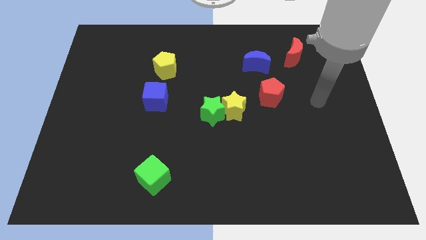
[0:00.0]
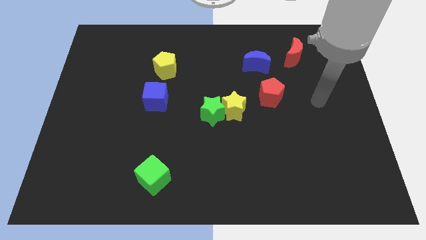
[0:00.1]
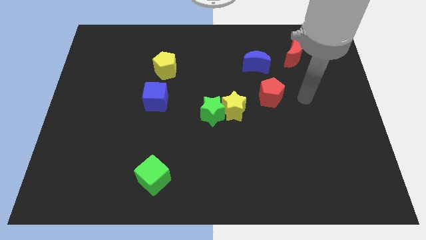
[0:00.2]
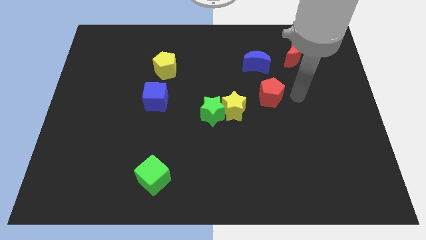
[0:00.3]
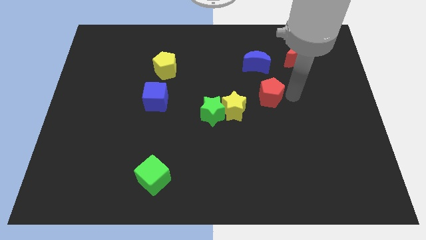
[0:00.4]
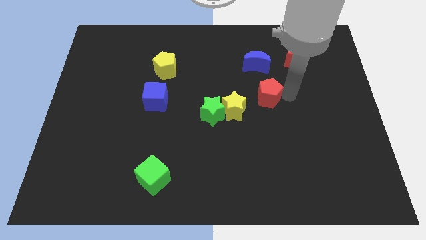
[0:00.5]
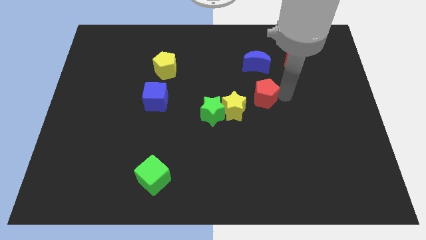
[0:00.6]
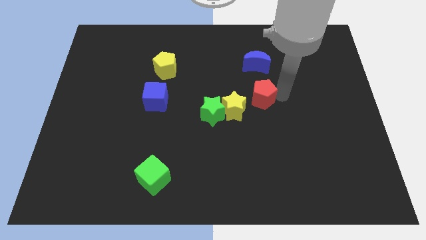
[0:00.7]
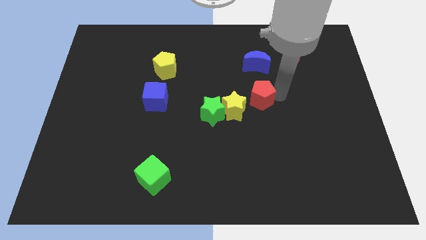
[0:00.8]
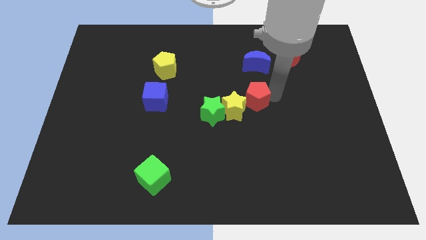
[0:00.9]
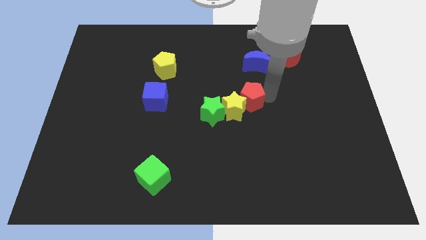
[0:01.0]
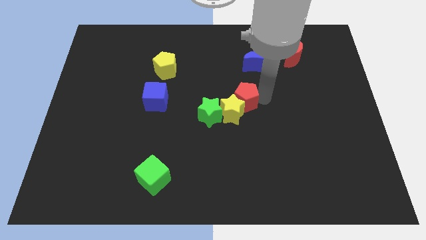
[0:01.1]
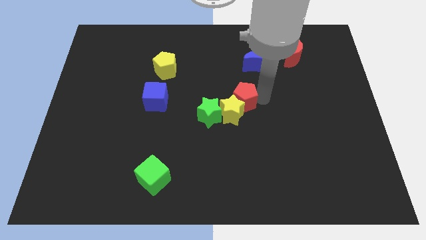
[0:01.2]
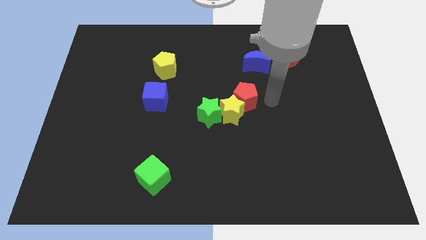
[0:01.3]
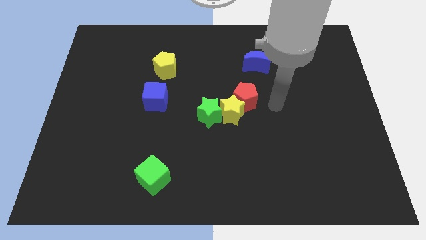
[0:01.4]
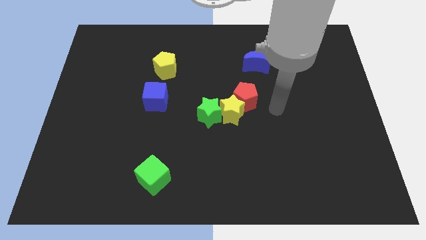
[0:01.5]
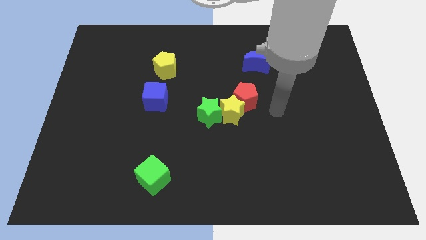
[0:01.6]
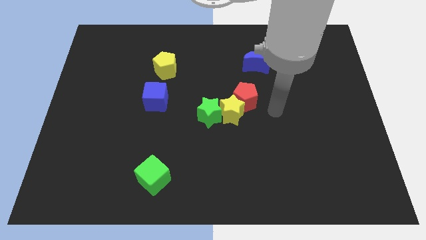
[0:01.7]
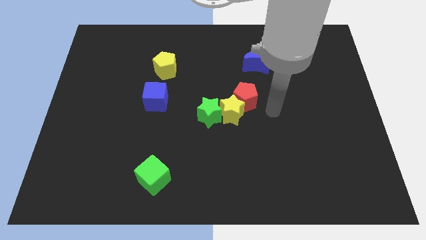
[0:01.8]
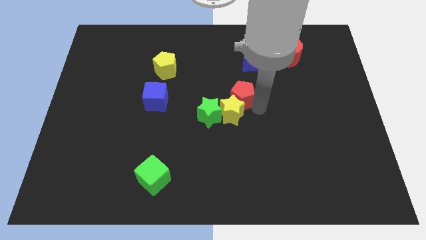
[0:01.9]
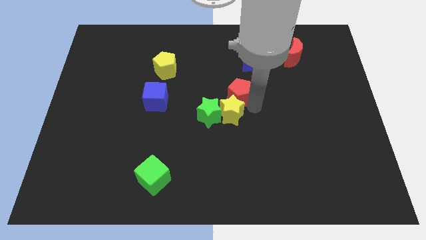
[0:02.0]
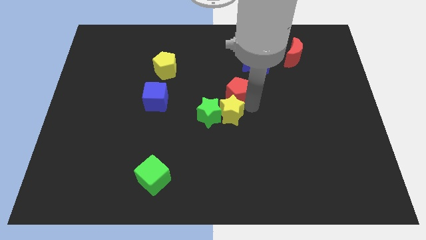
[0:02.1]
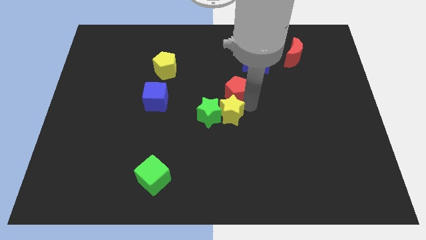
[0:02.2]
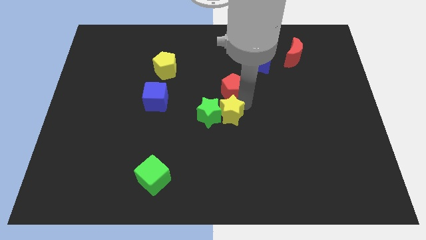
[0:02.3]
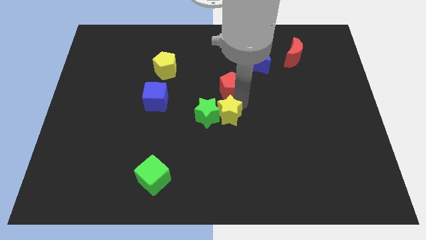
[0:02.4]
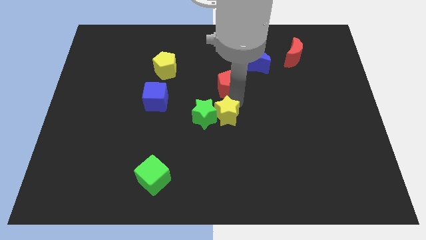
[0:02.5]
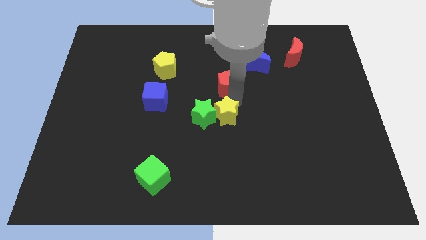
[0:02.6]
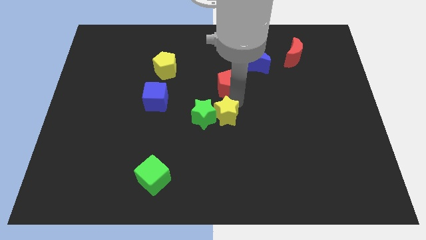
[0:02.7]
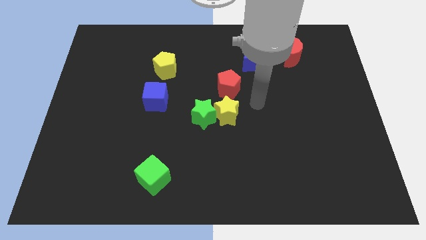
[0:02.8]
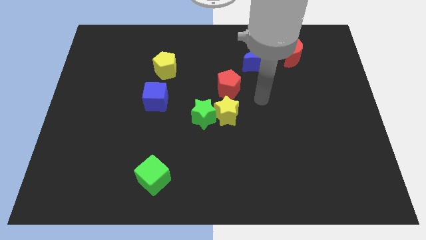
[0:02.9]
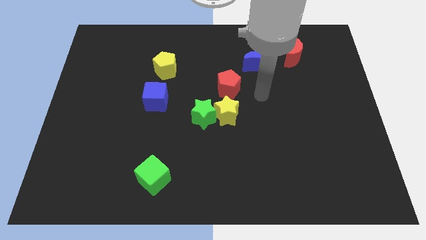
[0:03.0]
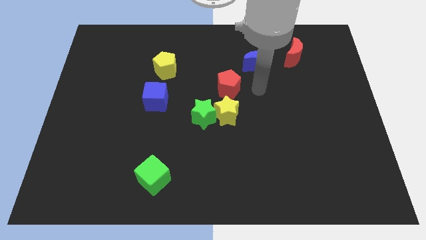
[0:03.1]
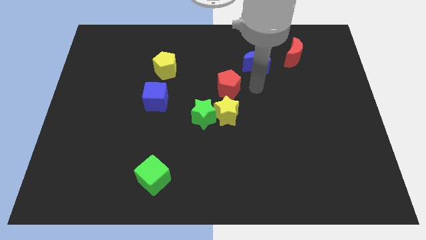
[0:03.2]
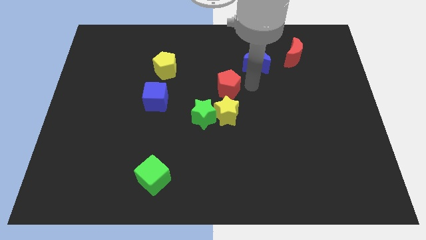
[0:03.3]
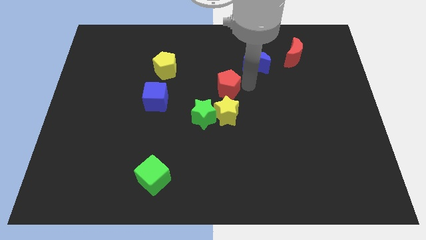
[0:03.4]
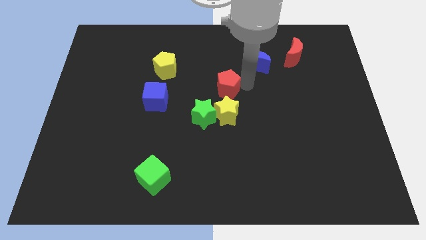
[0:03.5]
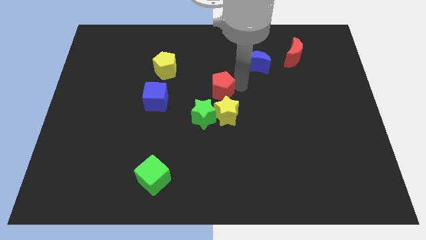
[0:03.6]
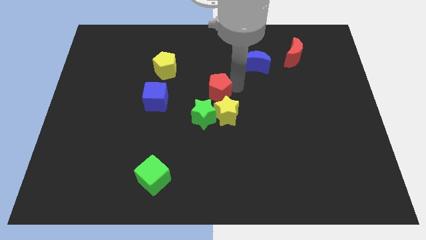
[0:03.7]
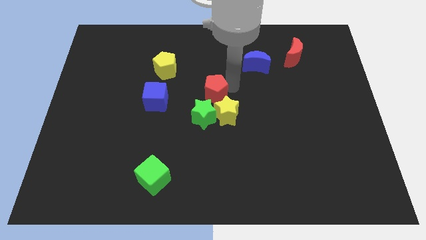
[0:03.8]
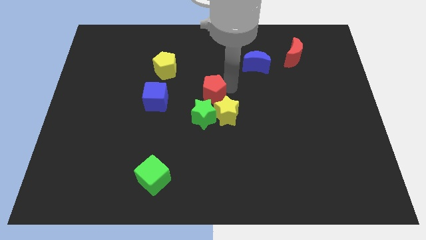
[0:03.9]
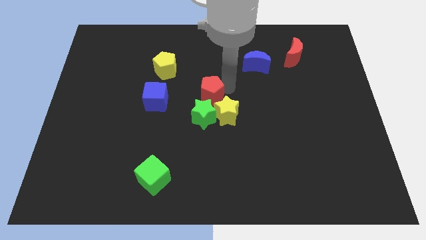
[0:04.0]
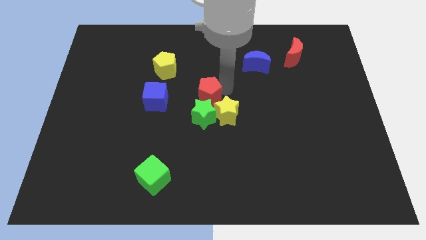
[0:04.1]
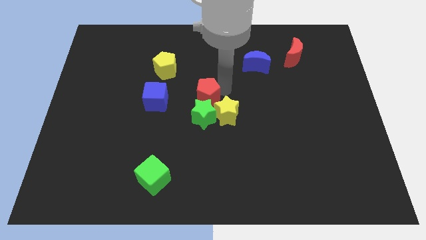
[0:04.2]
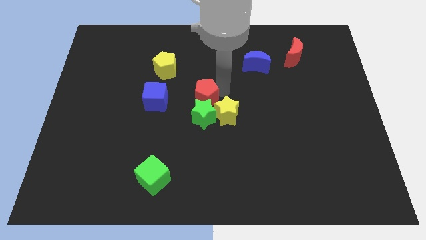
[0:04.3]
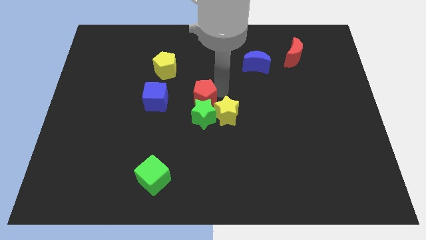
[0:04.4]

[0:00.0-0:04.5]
move the red pentagon close to the green star

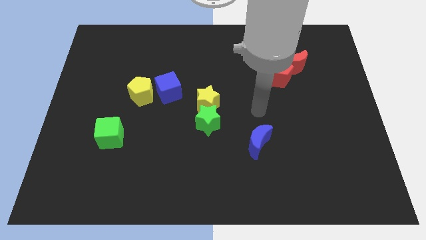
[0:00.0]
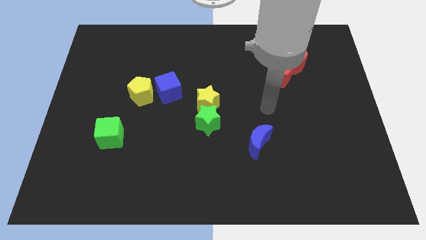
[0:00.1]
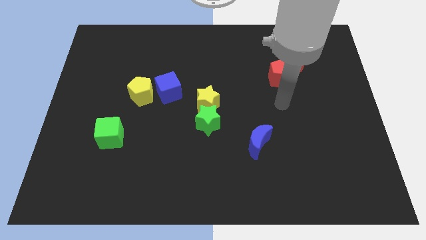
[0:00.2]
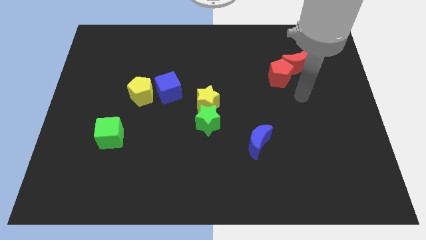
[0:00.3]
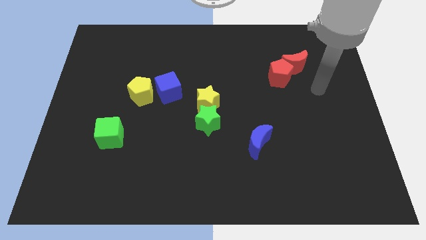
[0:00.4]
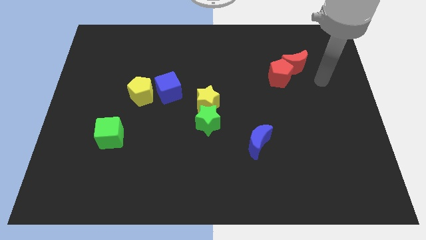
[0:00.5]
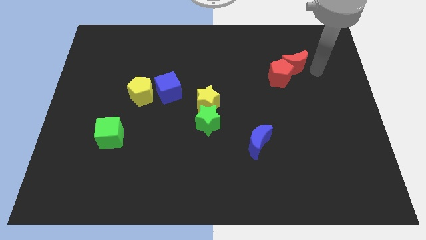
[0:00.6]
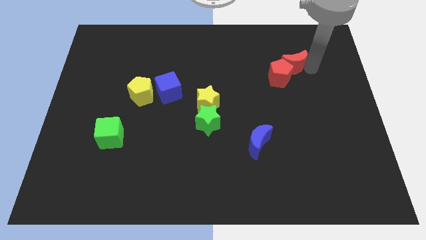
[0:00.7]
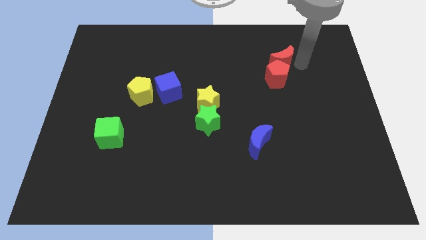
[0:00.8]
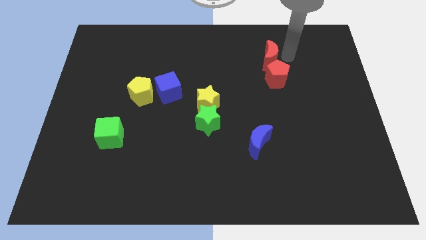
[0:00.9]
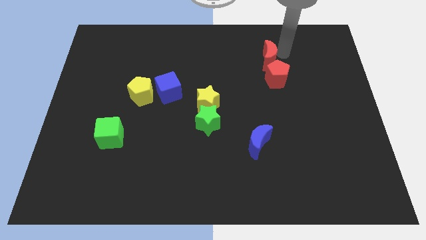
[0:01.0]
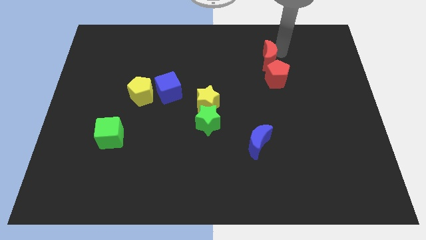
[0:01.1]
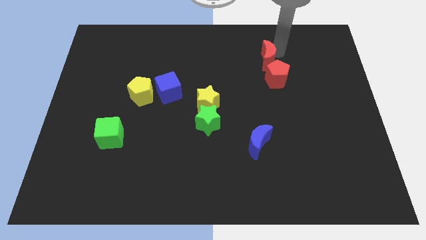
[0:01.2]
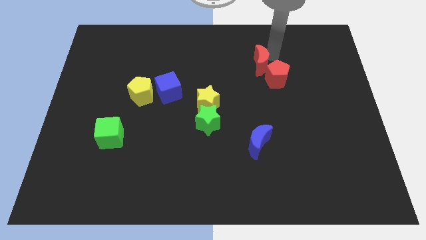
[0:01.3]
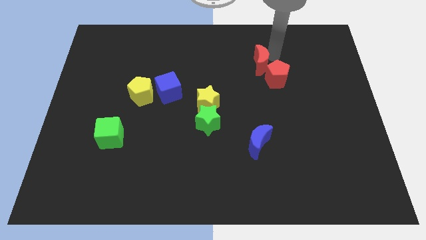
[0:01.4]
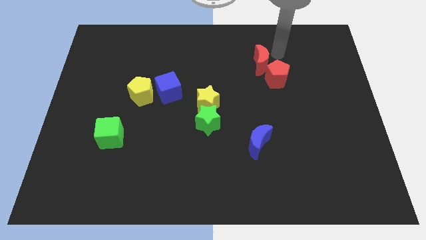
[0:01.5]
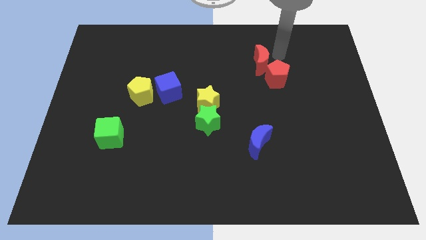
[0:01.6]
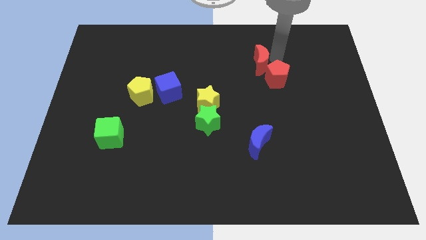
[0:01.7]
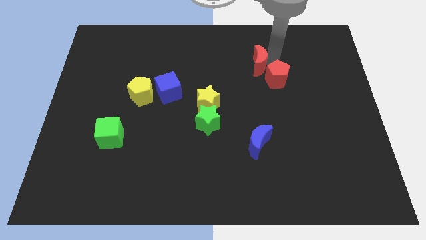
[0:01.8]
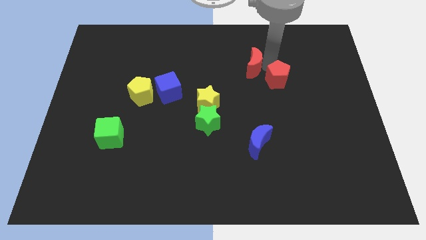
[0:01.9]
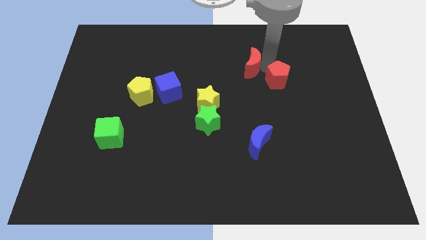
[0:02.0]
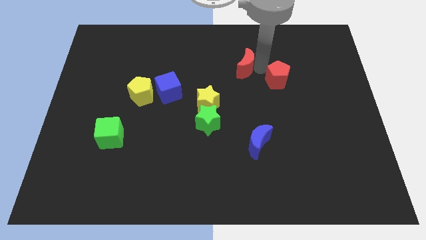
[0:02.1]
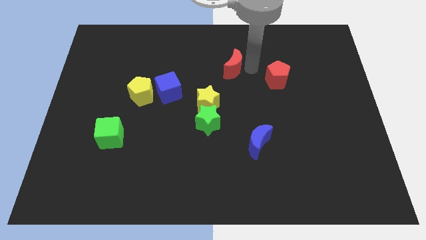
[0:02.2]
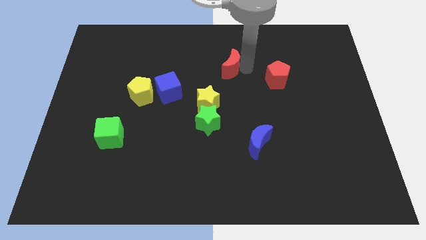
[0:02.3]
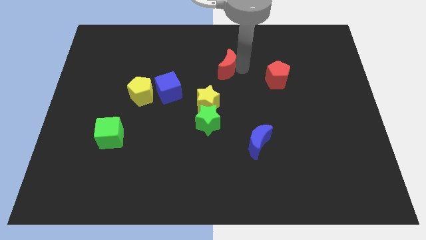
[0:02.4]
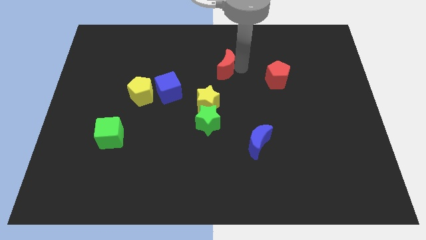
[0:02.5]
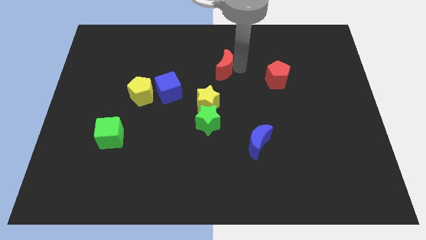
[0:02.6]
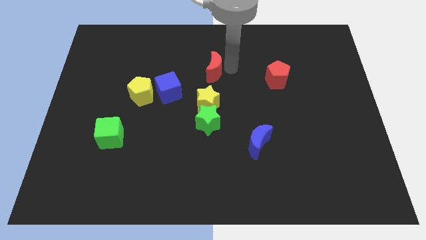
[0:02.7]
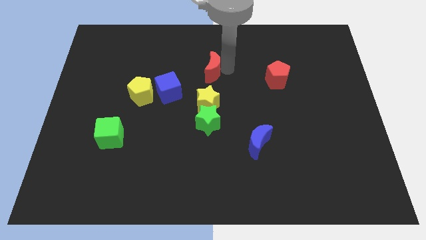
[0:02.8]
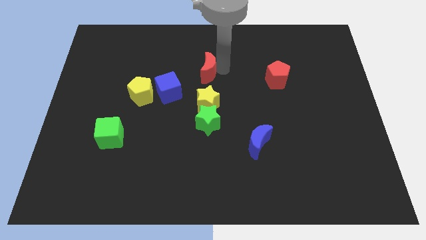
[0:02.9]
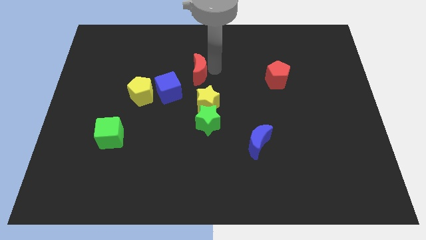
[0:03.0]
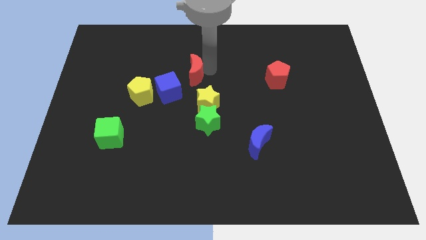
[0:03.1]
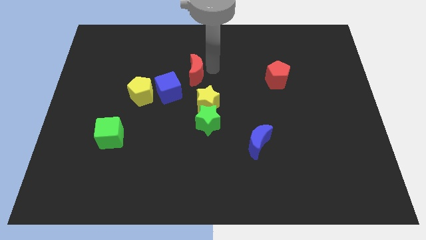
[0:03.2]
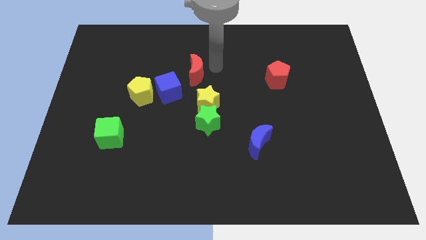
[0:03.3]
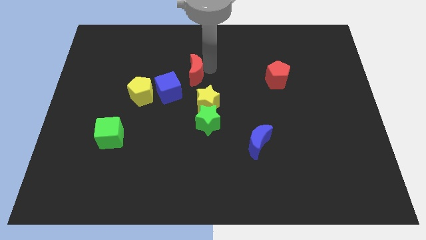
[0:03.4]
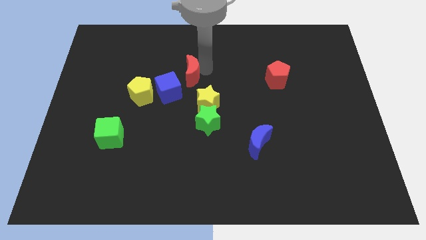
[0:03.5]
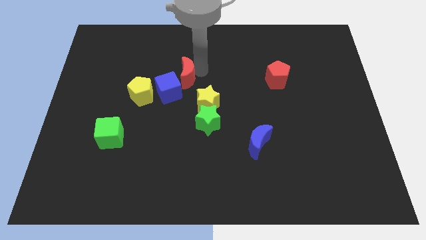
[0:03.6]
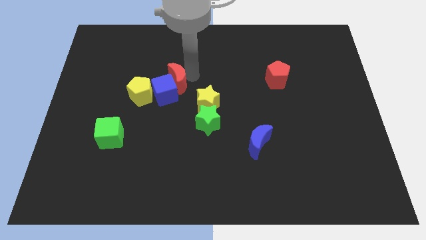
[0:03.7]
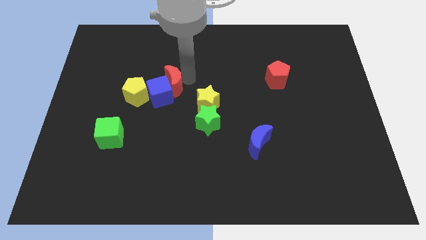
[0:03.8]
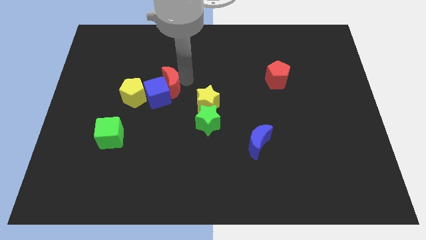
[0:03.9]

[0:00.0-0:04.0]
slide the red moon towards the blue cube

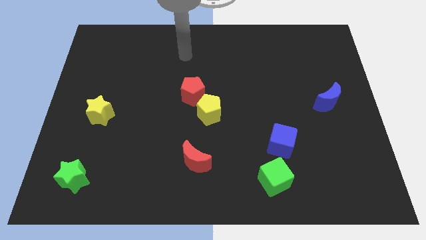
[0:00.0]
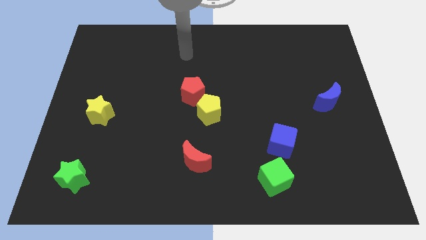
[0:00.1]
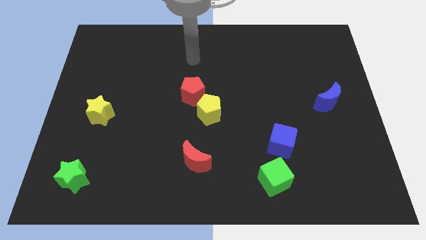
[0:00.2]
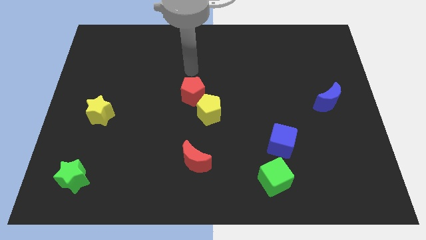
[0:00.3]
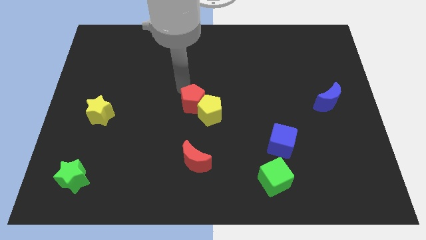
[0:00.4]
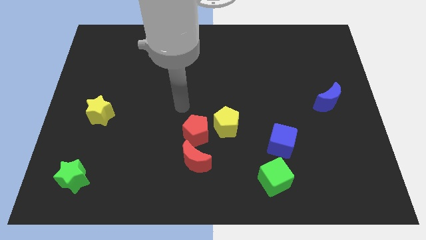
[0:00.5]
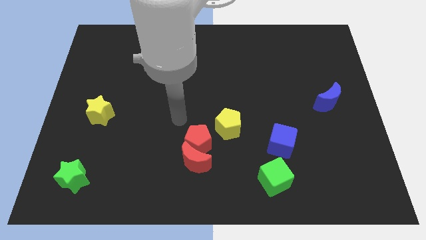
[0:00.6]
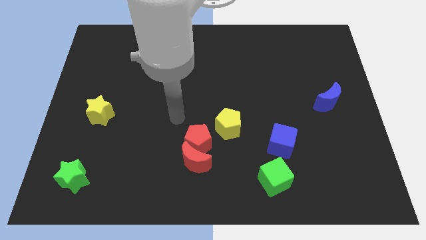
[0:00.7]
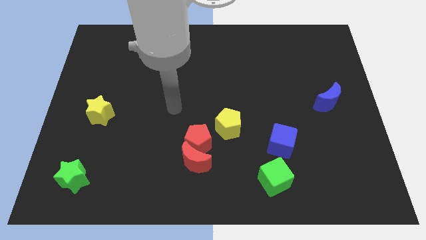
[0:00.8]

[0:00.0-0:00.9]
slide the red pentagon to the red moon
